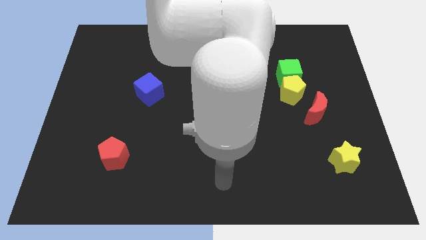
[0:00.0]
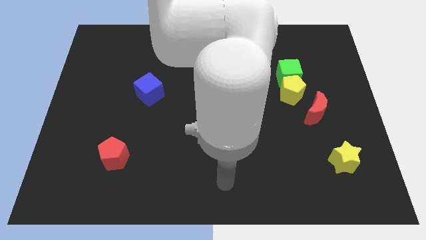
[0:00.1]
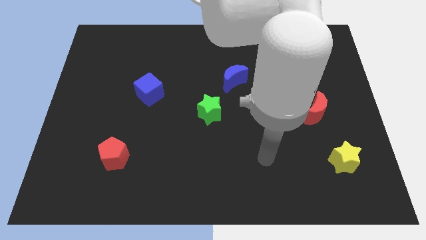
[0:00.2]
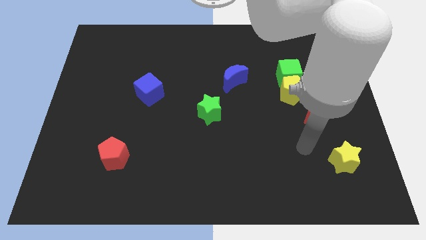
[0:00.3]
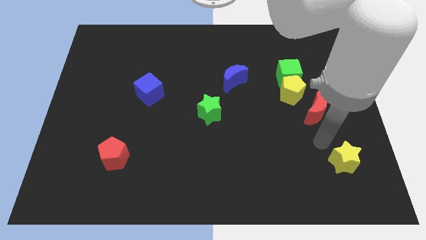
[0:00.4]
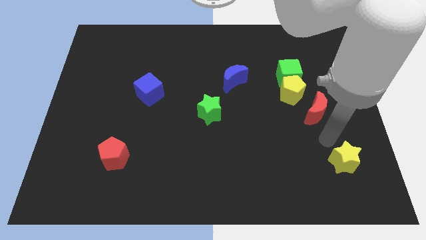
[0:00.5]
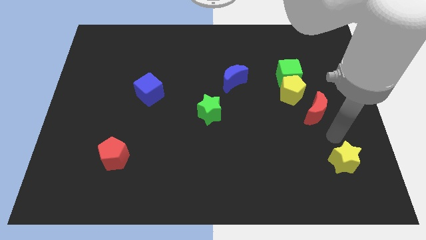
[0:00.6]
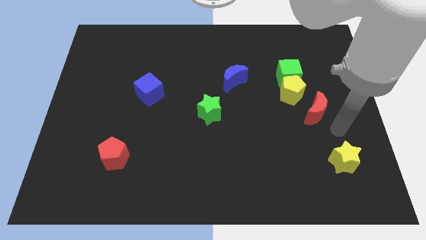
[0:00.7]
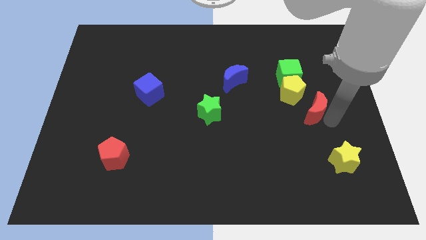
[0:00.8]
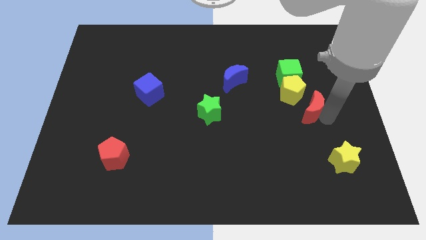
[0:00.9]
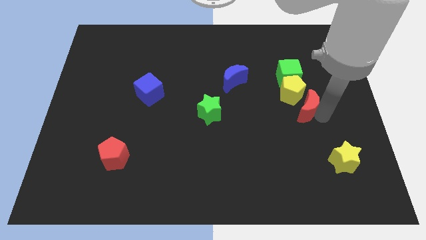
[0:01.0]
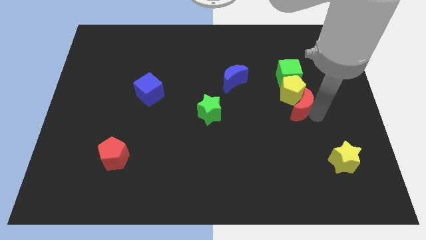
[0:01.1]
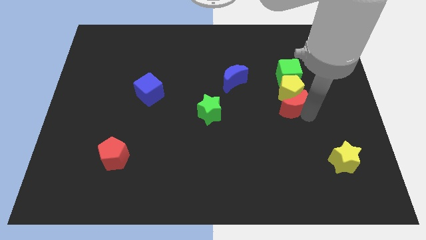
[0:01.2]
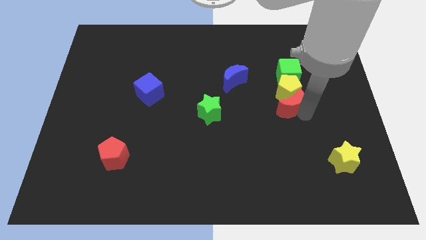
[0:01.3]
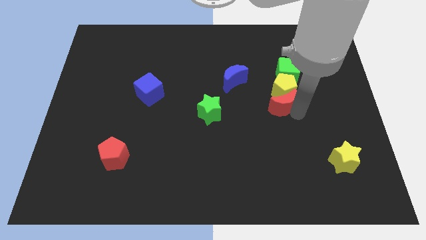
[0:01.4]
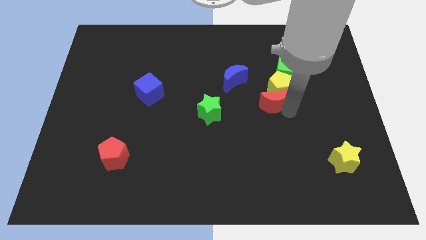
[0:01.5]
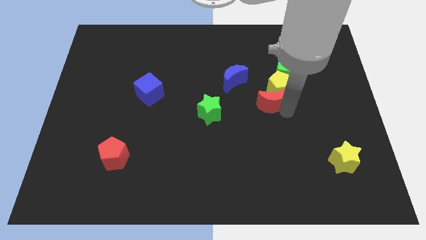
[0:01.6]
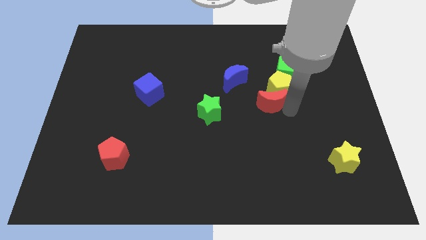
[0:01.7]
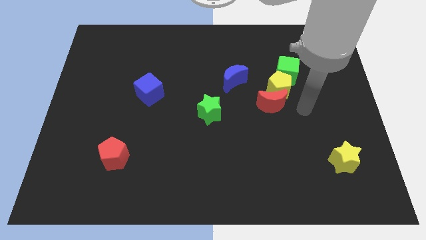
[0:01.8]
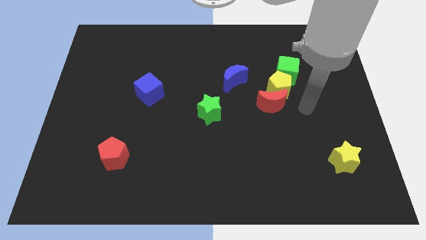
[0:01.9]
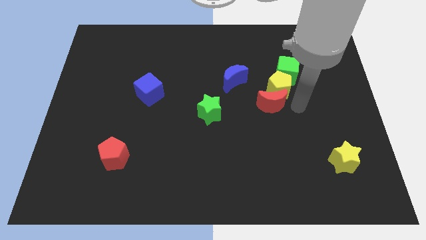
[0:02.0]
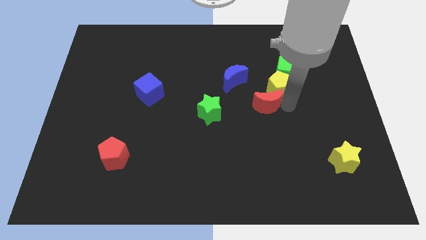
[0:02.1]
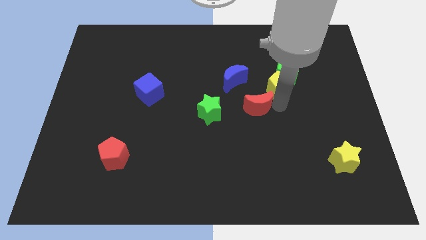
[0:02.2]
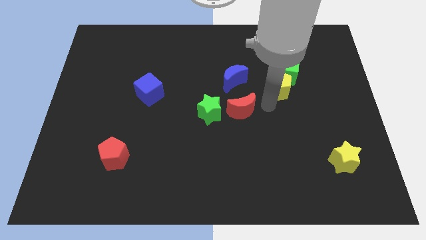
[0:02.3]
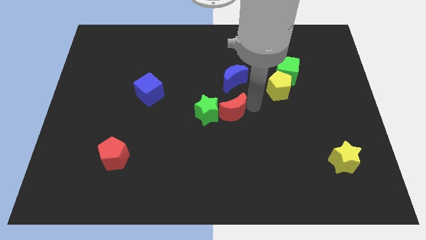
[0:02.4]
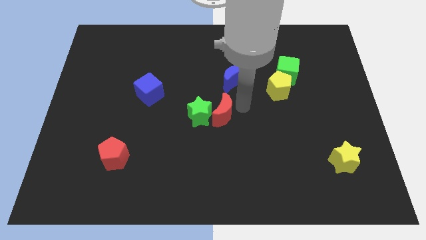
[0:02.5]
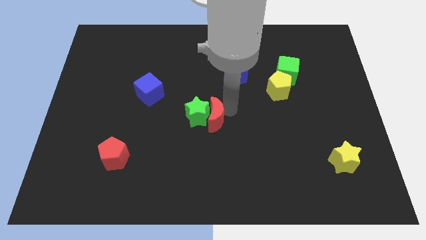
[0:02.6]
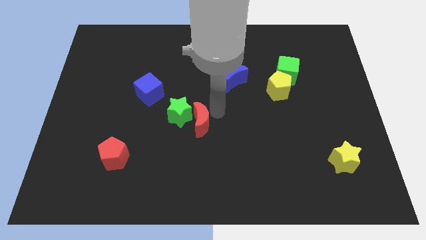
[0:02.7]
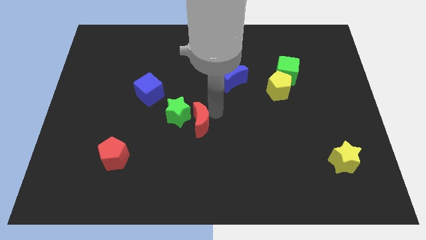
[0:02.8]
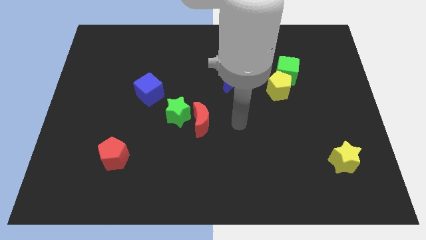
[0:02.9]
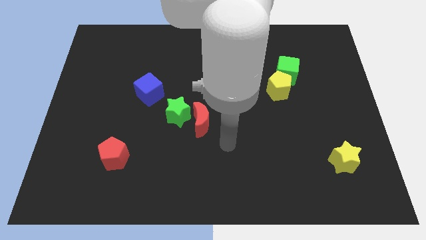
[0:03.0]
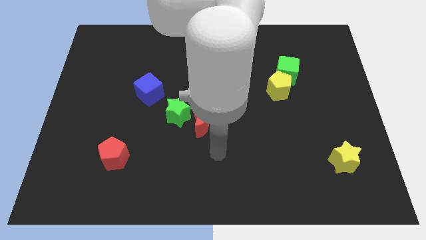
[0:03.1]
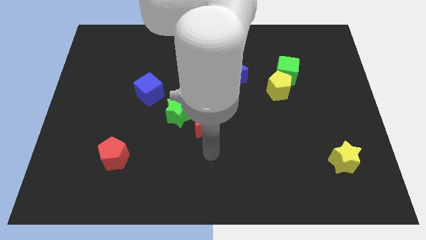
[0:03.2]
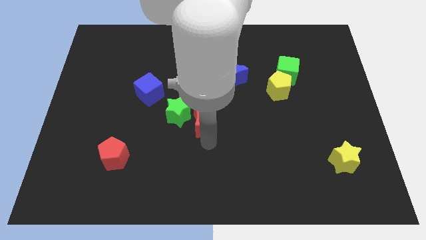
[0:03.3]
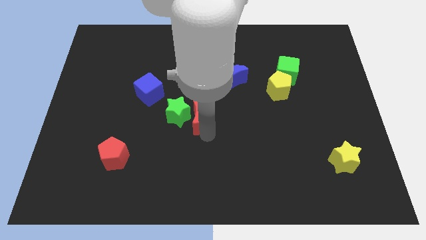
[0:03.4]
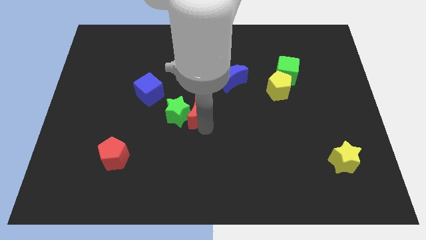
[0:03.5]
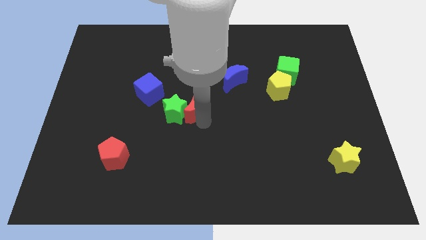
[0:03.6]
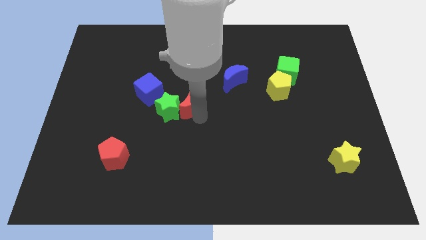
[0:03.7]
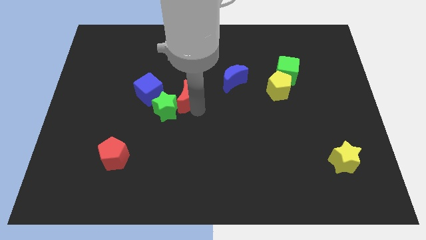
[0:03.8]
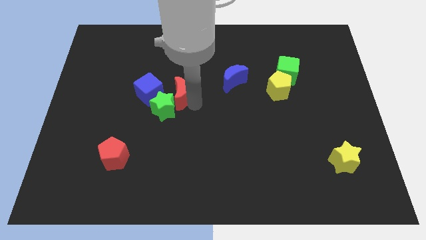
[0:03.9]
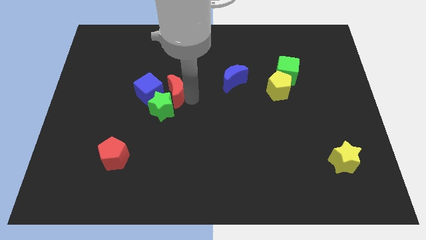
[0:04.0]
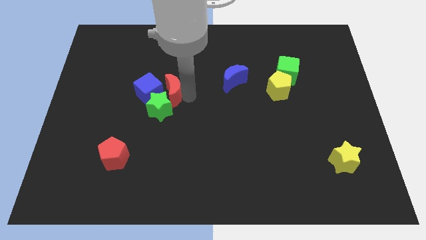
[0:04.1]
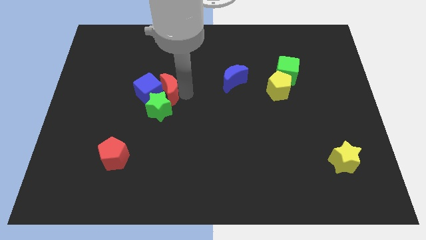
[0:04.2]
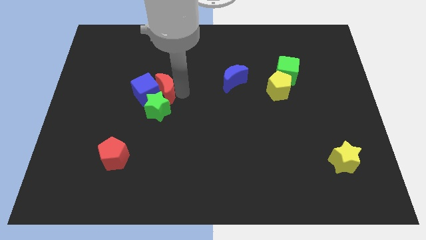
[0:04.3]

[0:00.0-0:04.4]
put the red moon to the blue cube

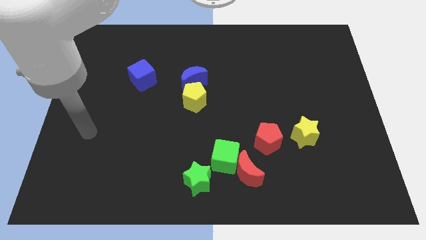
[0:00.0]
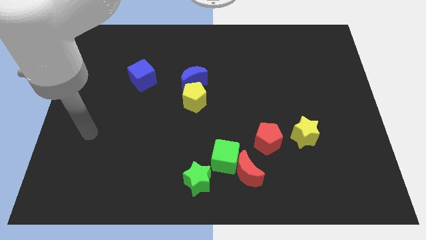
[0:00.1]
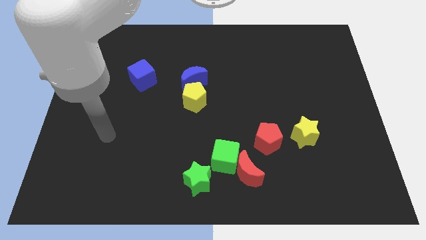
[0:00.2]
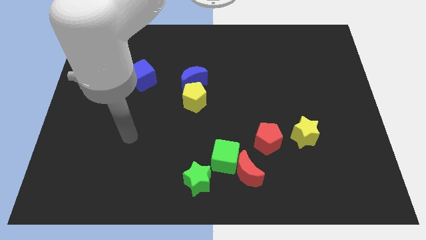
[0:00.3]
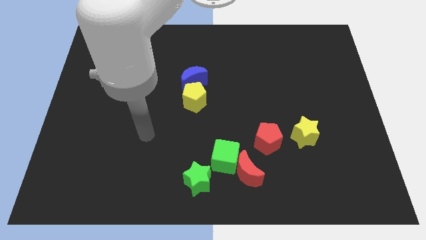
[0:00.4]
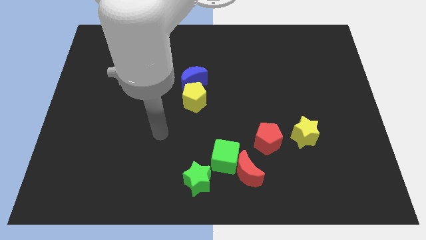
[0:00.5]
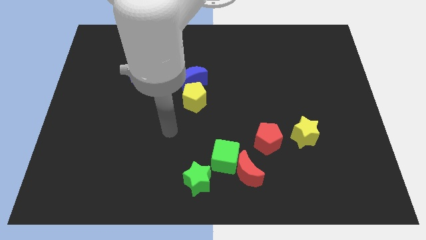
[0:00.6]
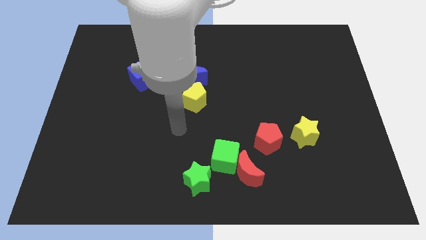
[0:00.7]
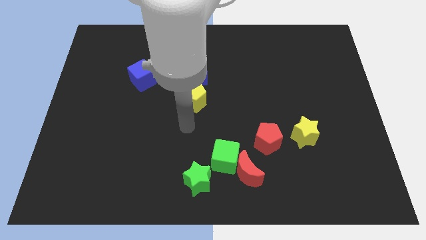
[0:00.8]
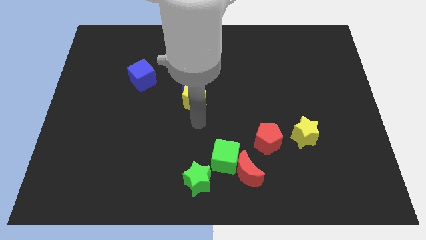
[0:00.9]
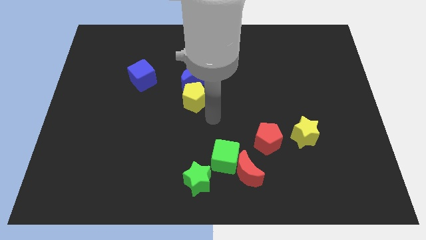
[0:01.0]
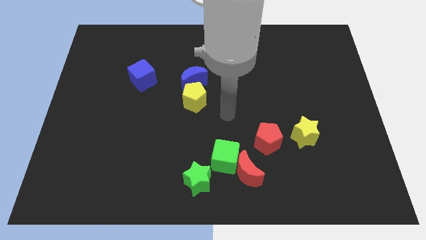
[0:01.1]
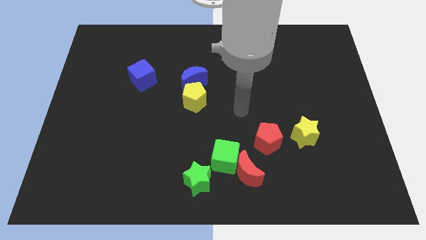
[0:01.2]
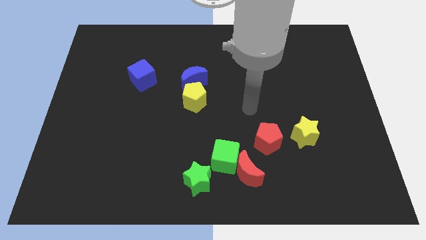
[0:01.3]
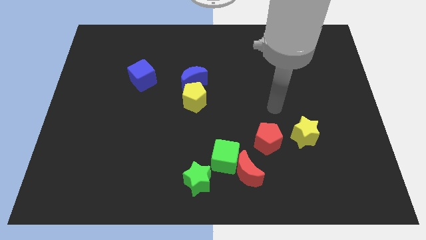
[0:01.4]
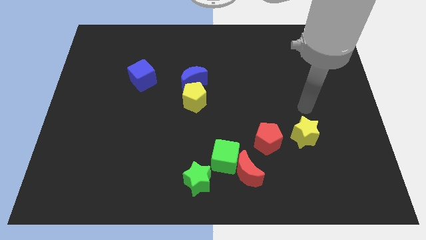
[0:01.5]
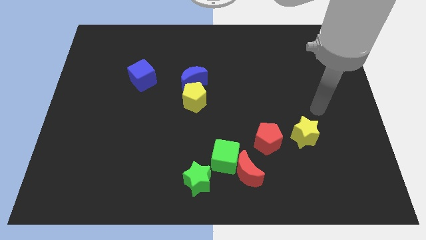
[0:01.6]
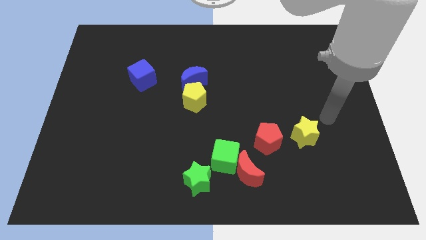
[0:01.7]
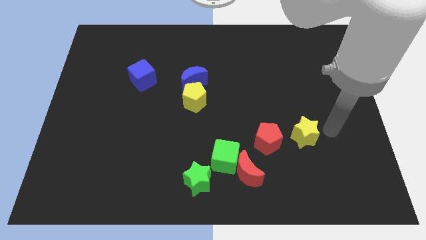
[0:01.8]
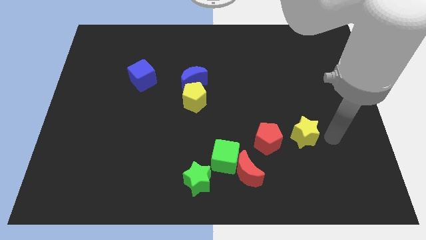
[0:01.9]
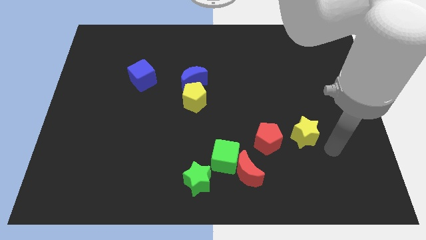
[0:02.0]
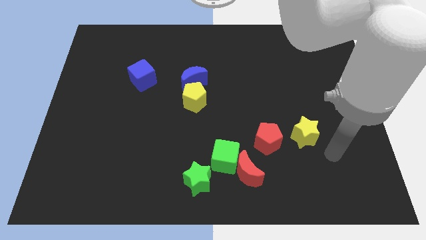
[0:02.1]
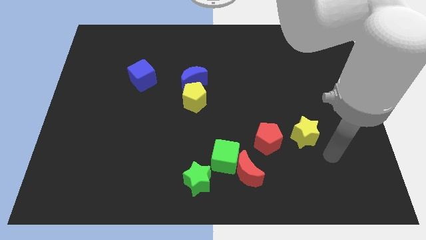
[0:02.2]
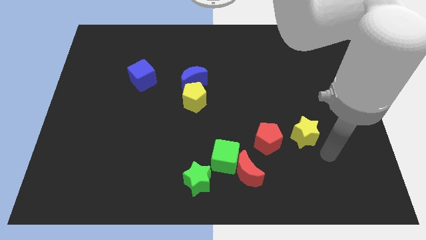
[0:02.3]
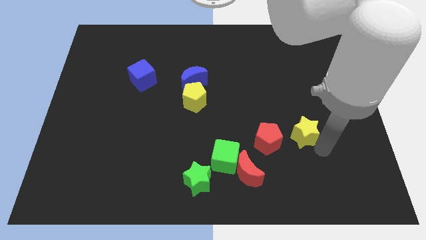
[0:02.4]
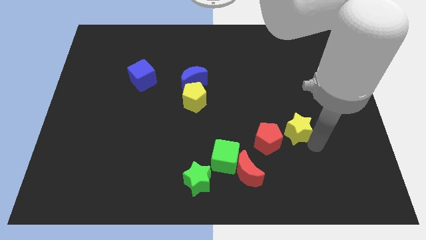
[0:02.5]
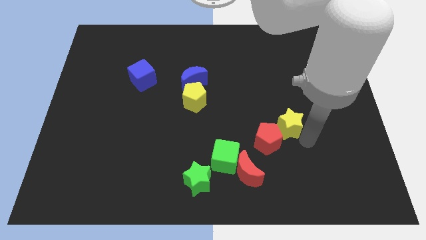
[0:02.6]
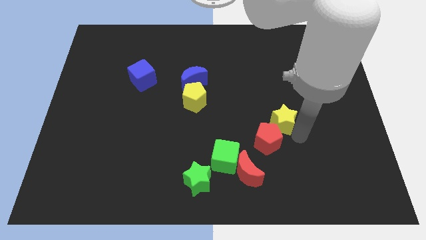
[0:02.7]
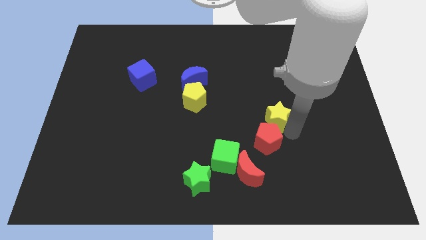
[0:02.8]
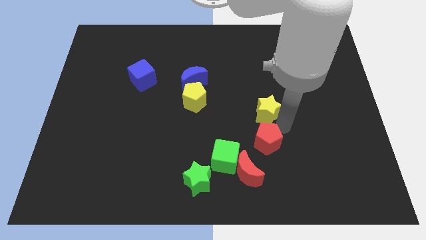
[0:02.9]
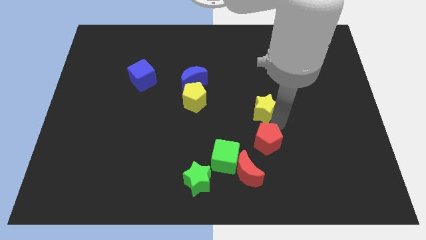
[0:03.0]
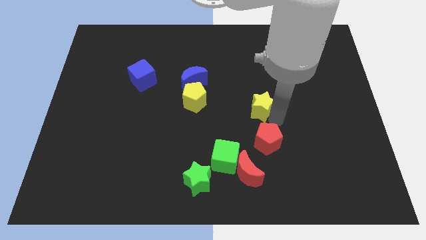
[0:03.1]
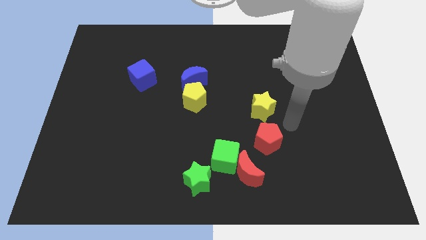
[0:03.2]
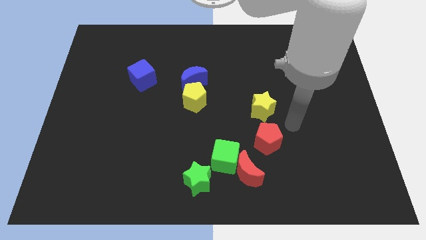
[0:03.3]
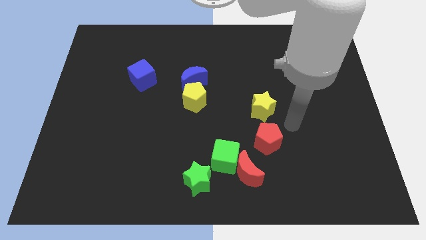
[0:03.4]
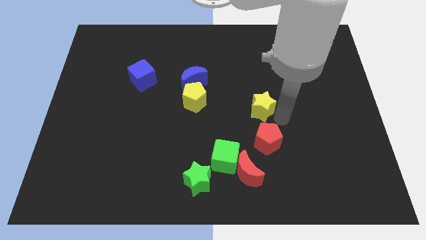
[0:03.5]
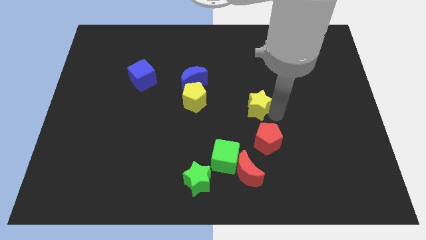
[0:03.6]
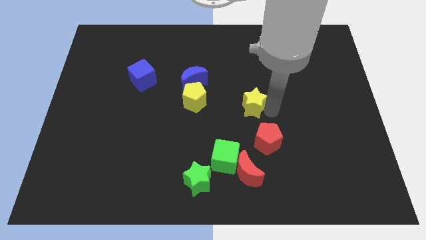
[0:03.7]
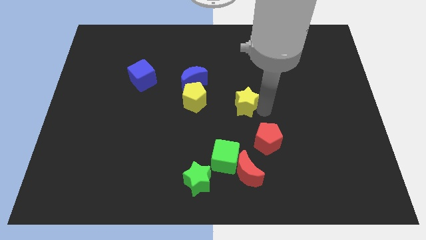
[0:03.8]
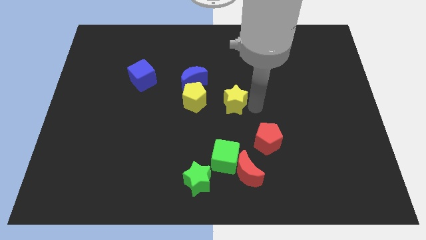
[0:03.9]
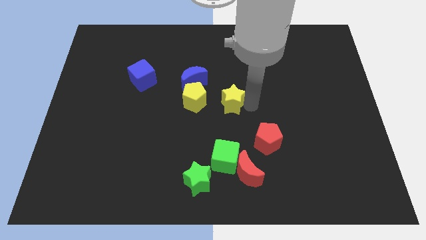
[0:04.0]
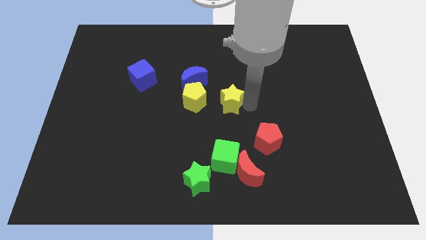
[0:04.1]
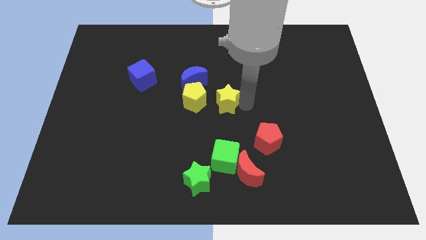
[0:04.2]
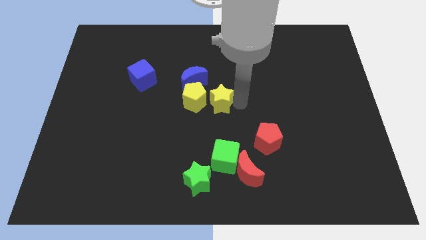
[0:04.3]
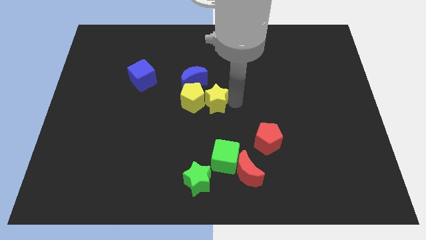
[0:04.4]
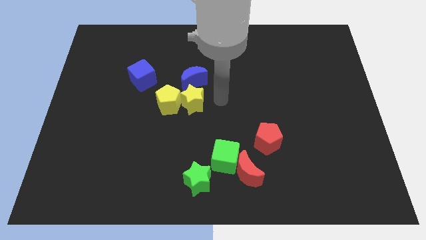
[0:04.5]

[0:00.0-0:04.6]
put the yellow star towards the yellow pentagon
